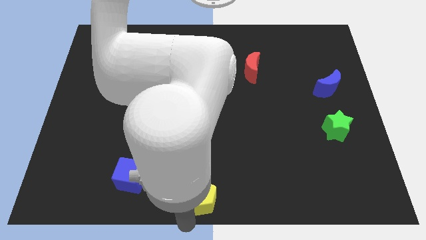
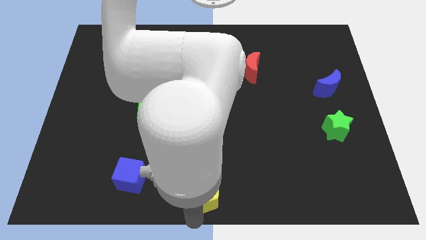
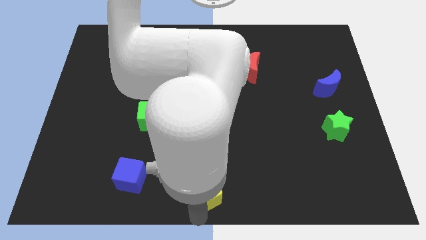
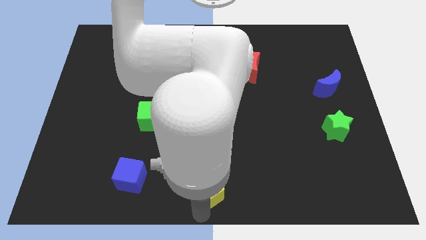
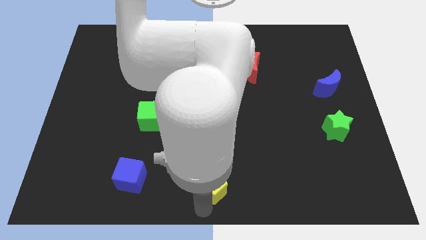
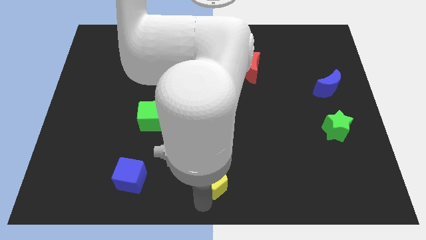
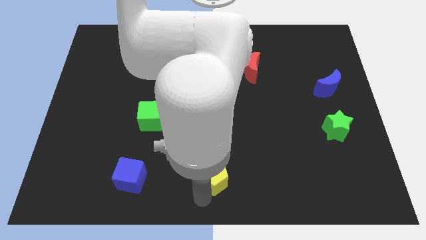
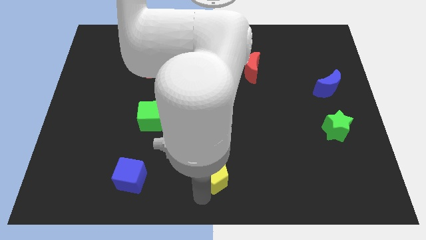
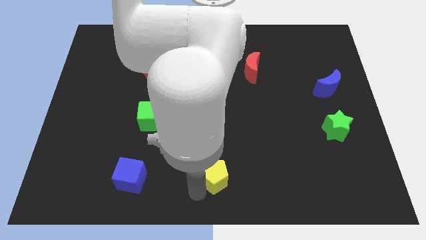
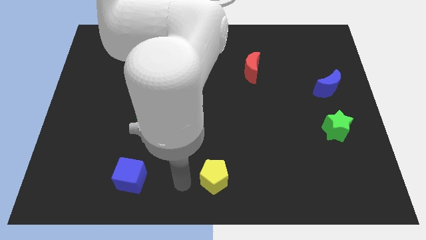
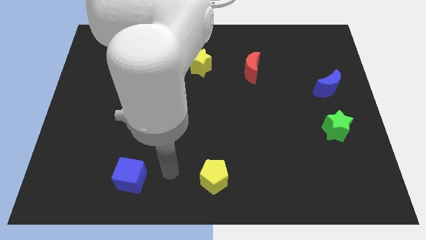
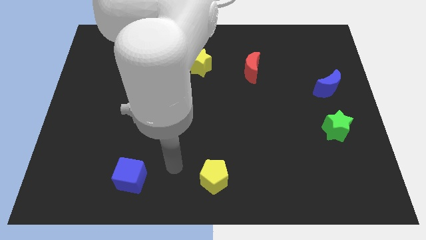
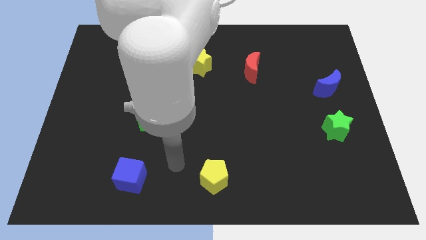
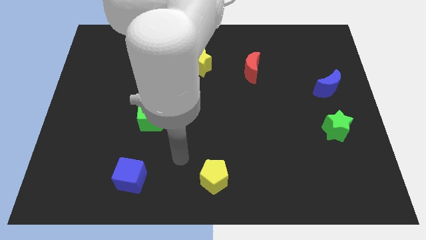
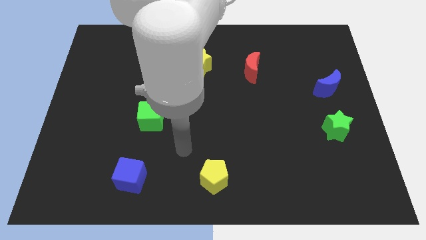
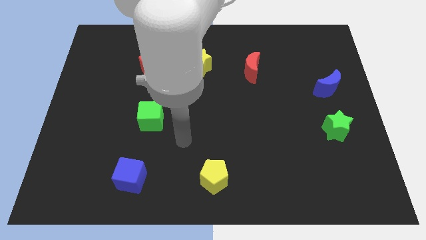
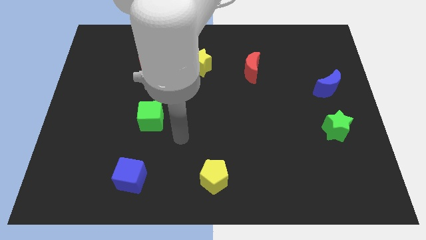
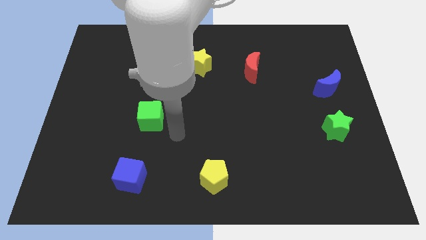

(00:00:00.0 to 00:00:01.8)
move the yellow pentagon horizontally right to the blue cube

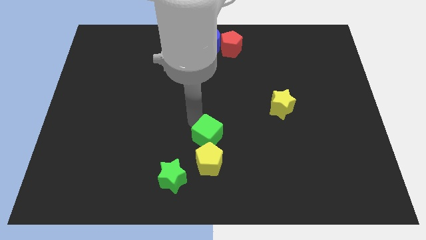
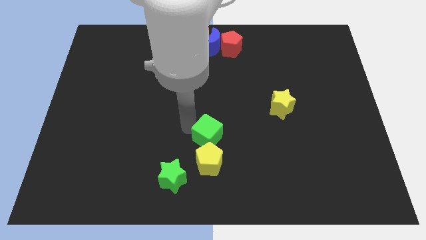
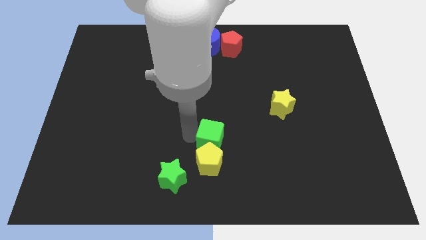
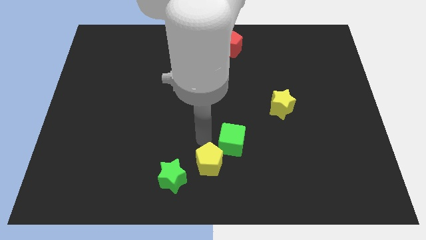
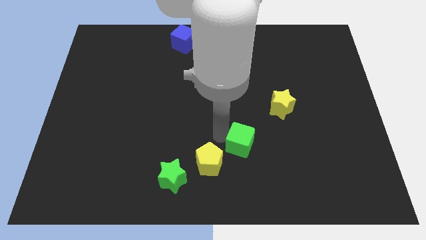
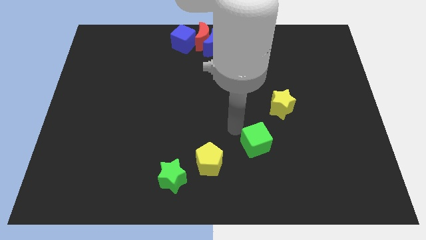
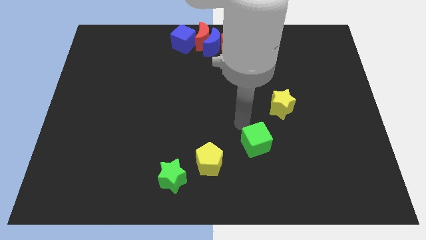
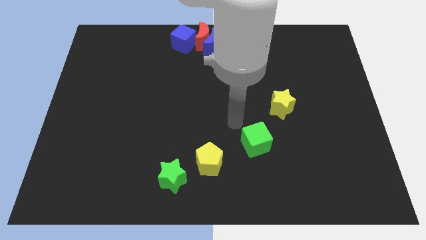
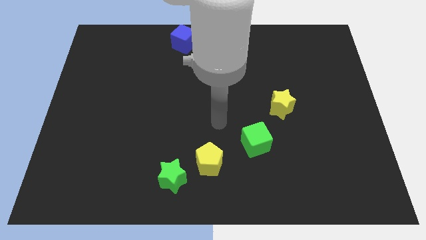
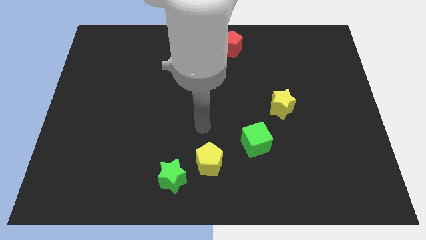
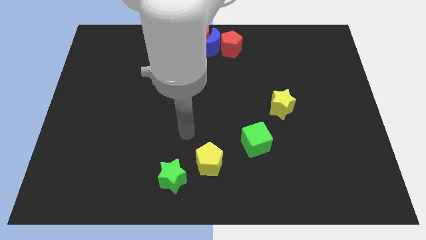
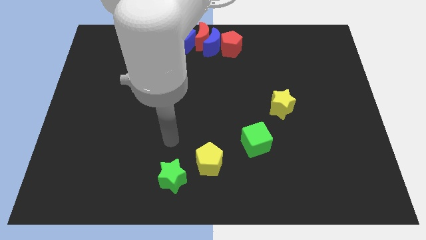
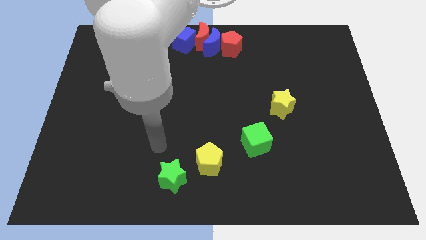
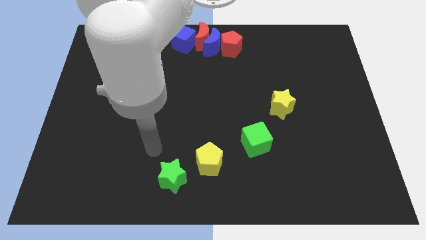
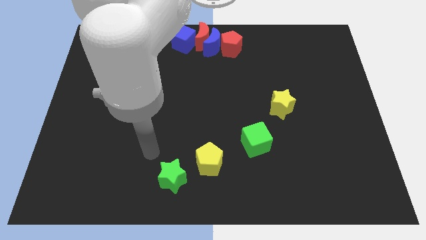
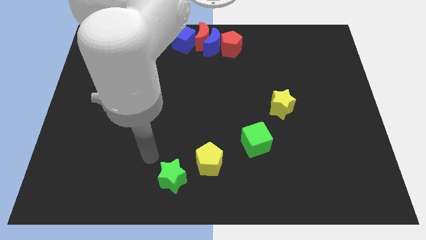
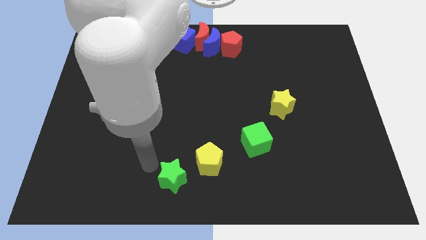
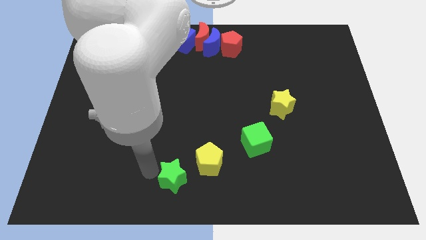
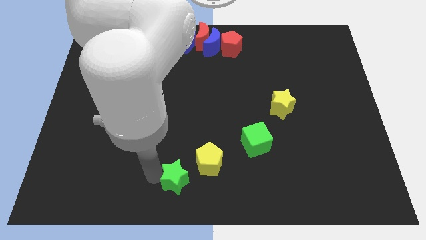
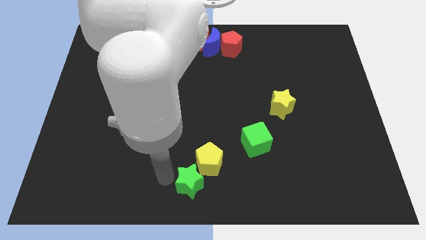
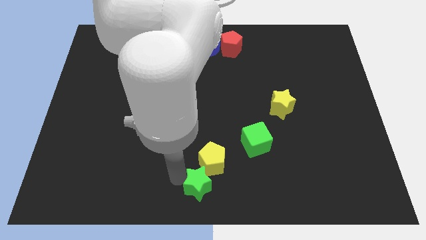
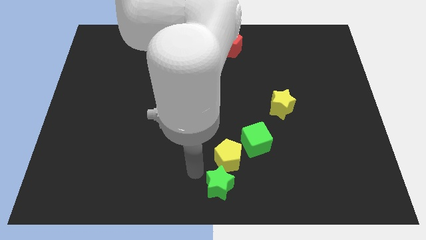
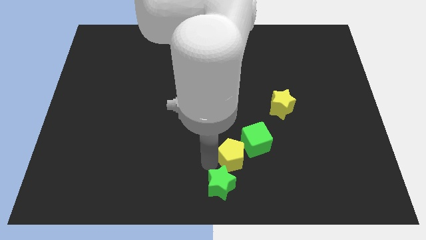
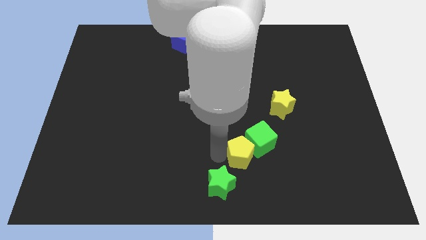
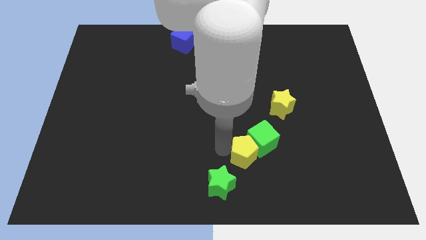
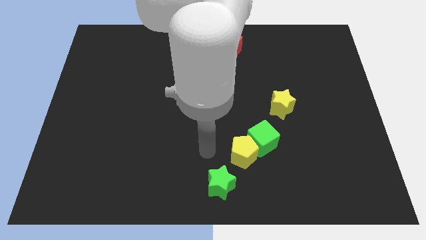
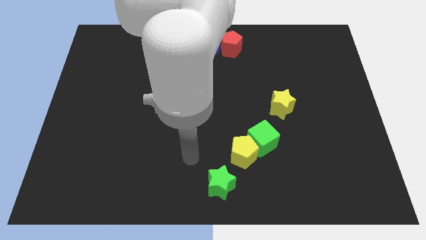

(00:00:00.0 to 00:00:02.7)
drag green cube and yellow pentagon towards right side of the board

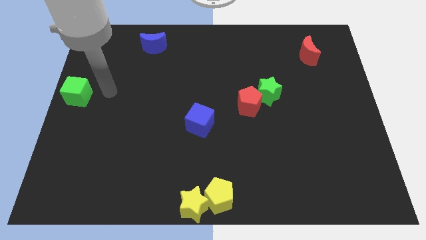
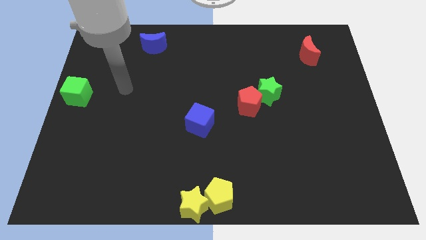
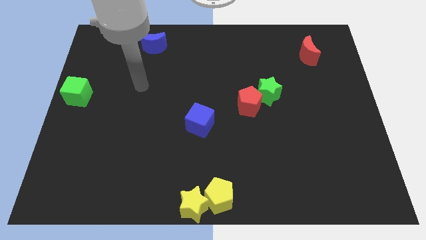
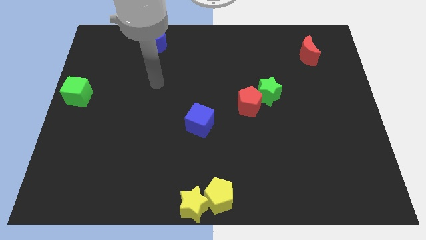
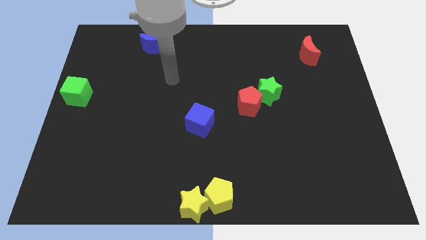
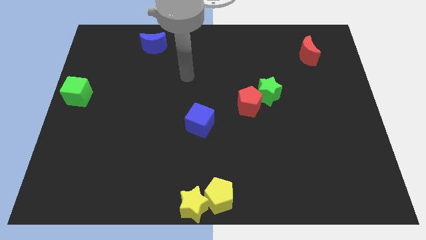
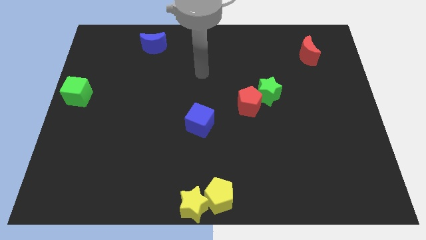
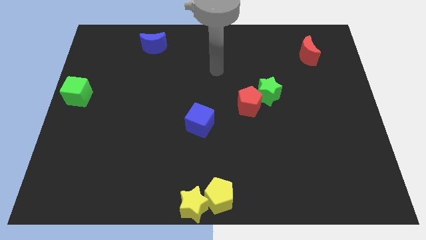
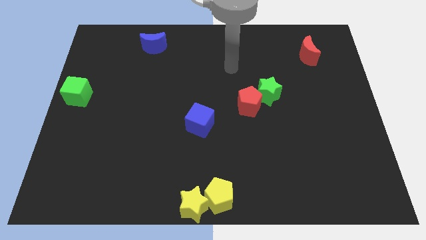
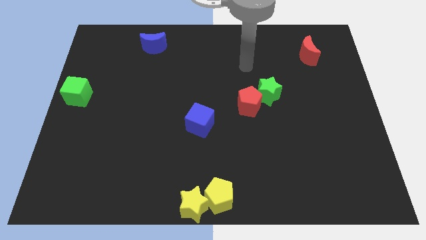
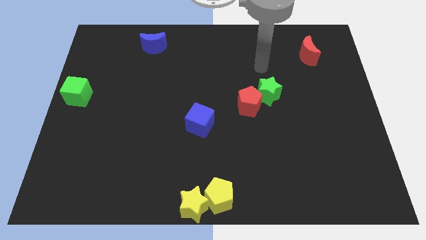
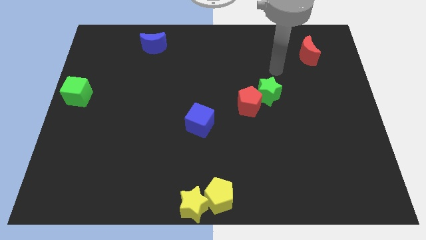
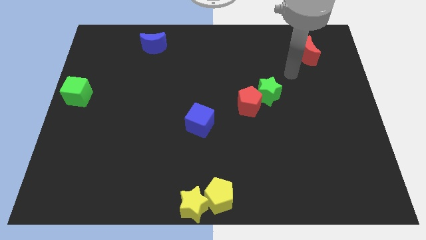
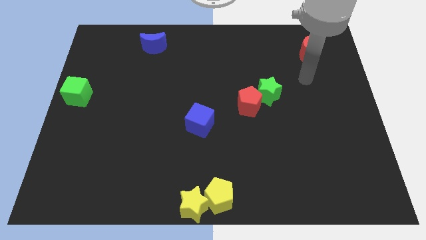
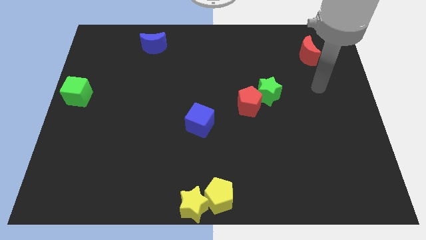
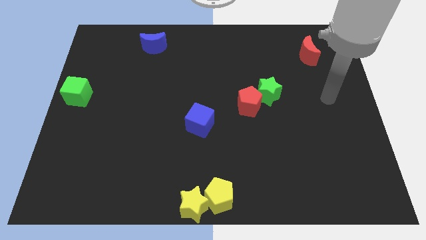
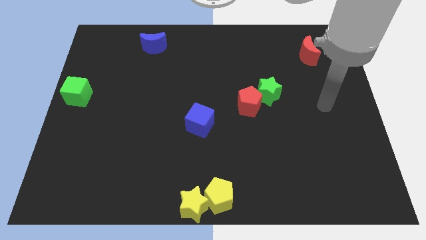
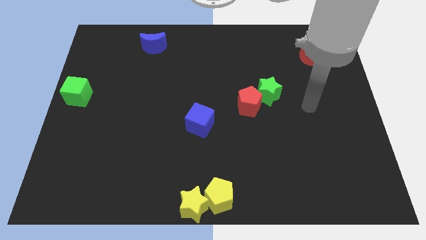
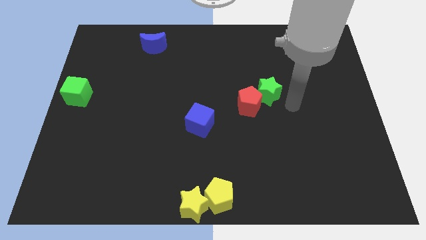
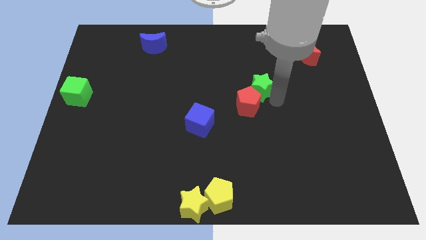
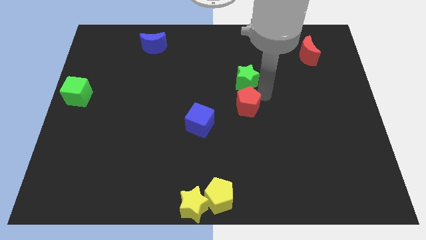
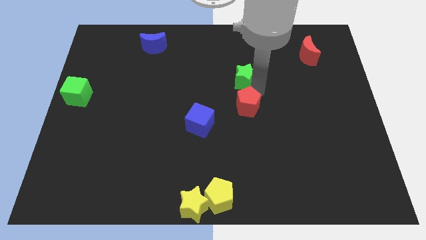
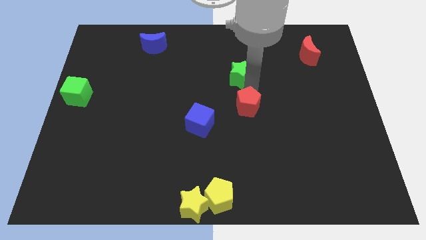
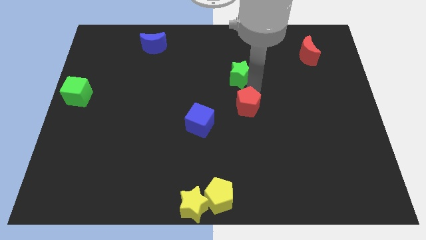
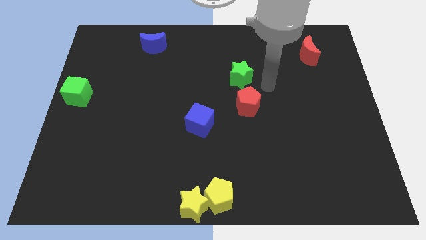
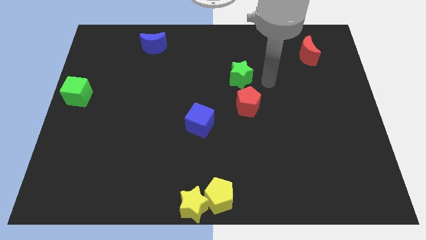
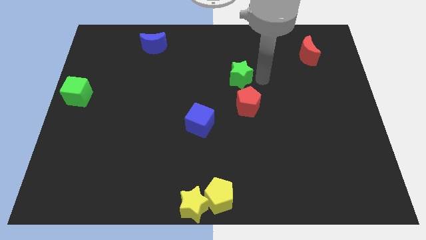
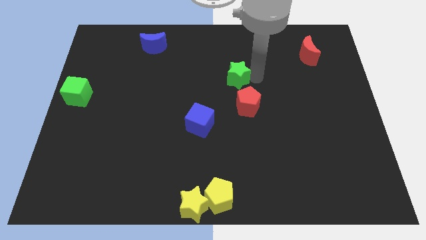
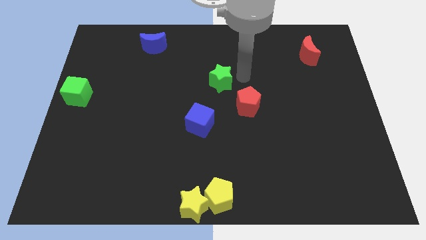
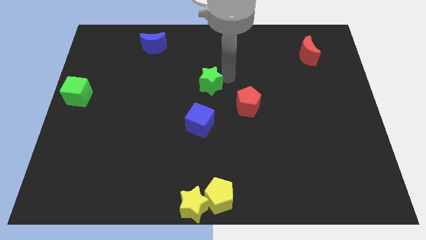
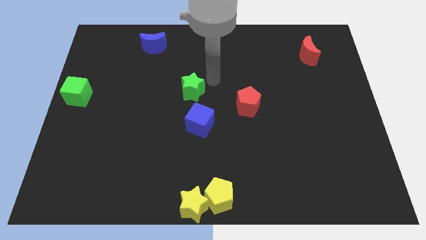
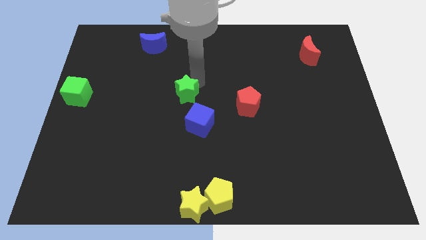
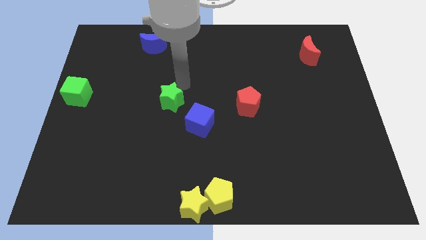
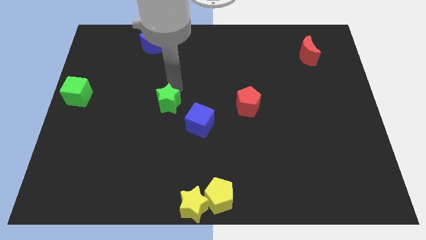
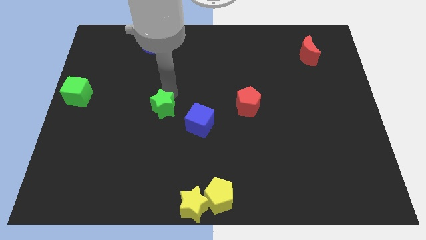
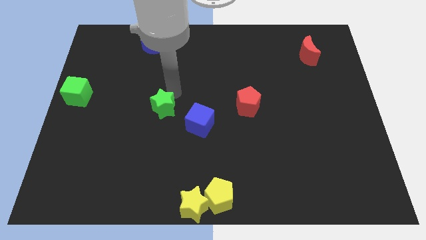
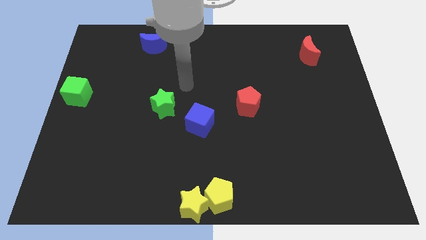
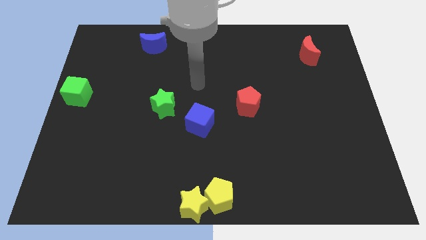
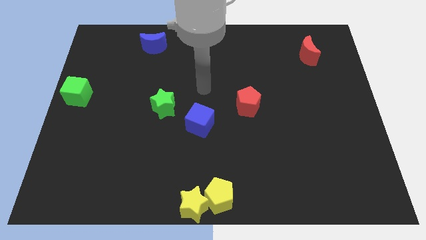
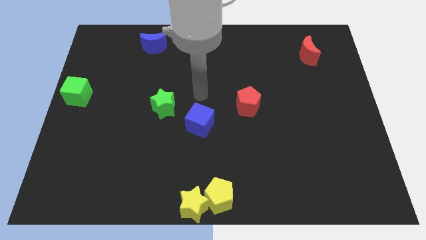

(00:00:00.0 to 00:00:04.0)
place the green star at the top left of the blue cube

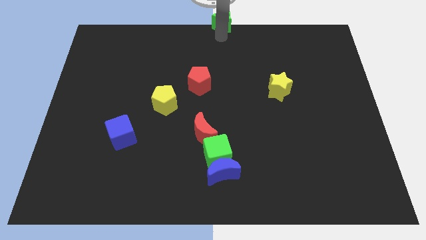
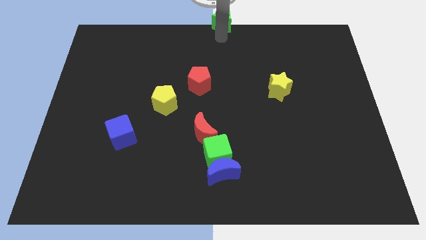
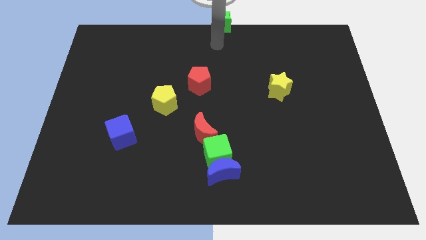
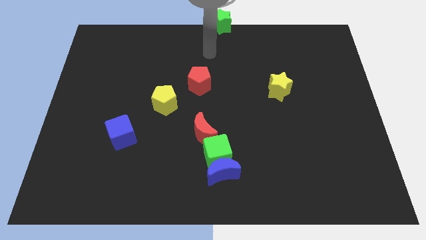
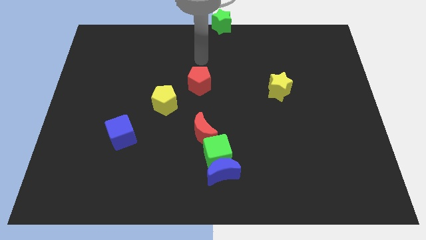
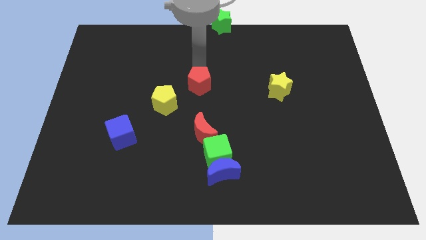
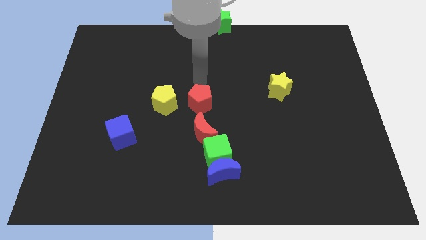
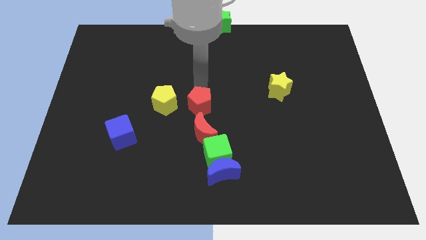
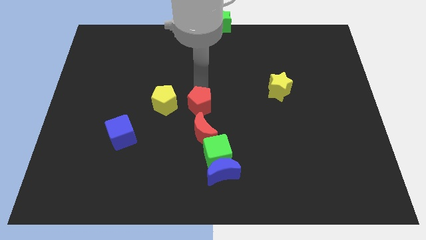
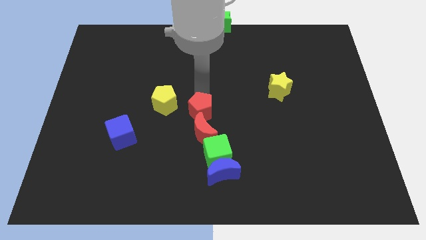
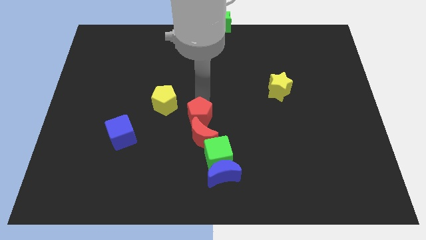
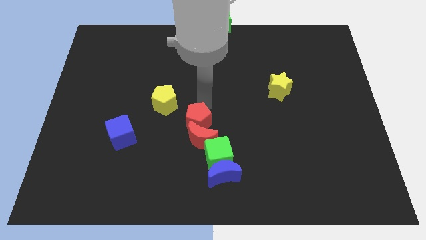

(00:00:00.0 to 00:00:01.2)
push the red pentagon into the top of the red crescent
